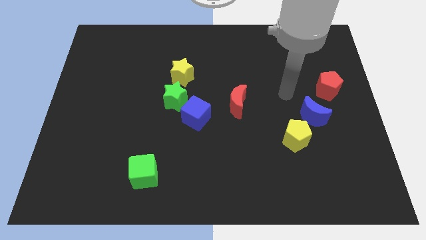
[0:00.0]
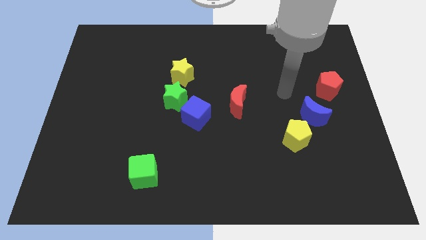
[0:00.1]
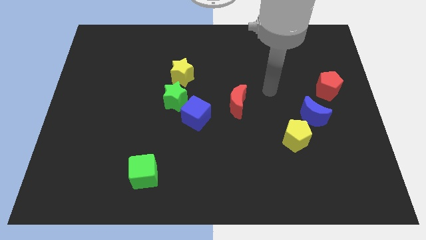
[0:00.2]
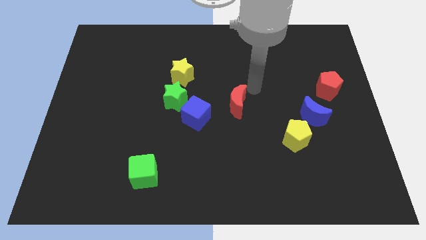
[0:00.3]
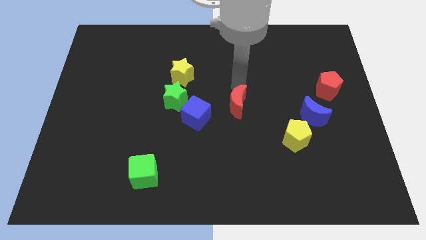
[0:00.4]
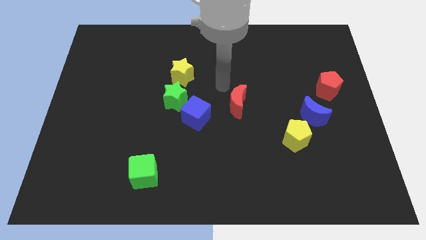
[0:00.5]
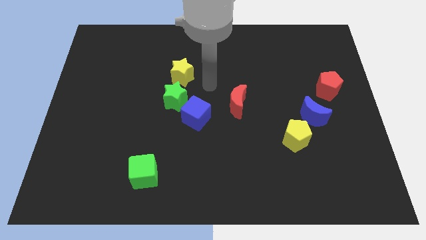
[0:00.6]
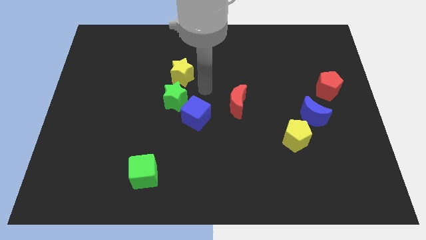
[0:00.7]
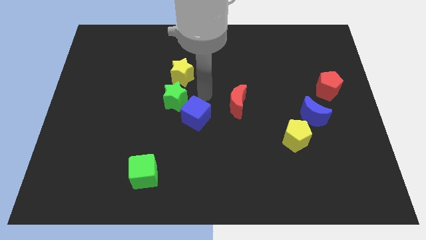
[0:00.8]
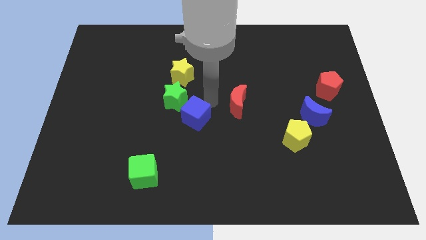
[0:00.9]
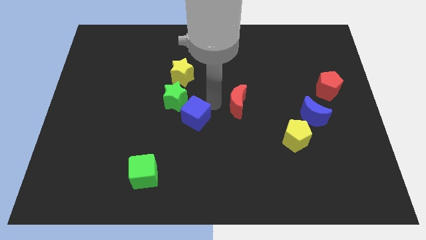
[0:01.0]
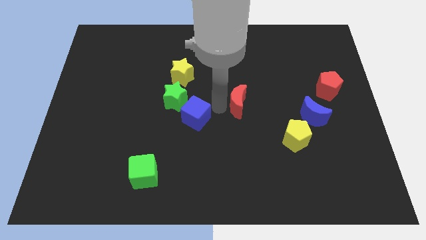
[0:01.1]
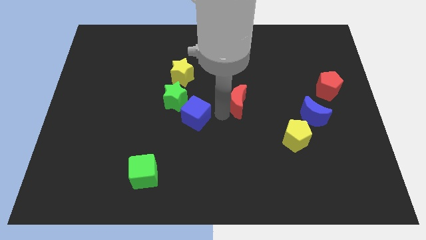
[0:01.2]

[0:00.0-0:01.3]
place your arm to the left side of the red moon

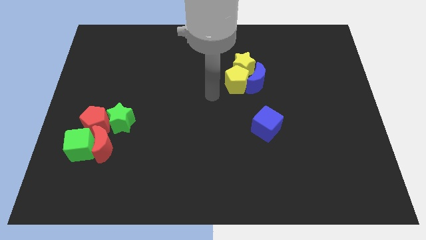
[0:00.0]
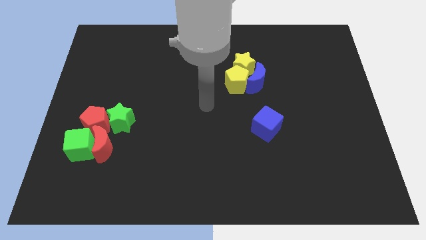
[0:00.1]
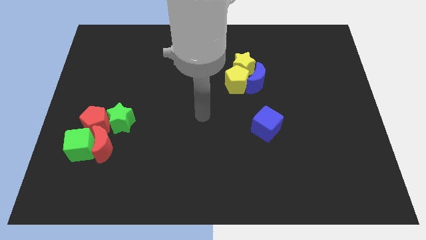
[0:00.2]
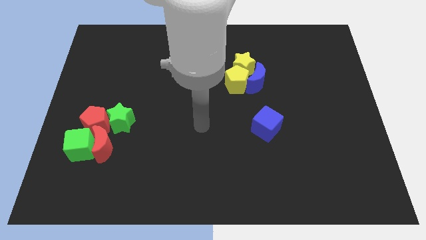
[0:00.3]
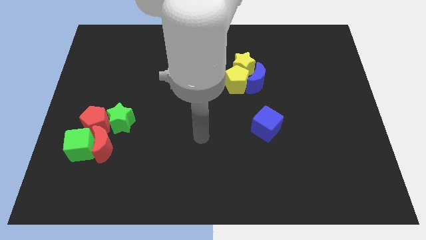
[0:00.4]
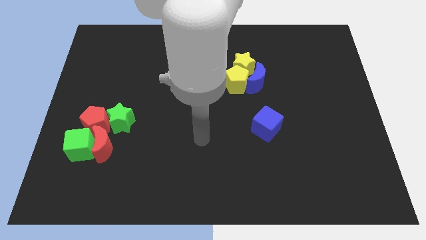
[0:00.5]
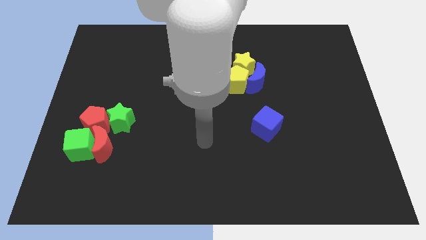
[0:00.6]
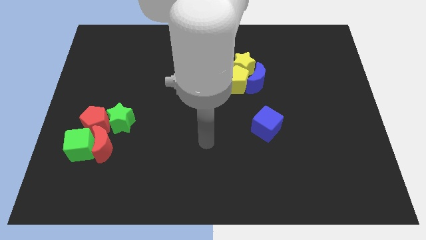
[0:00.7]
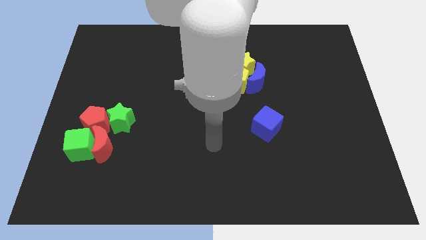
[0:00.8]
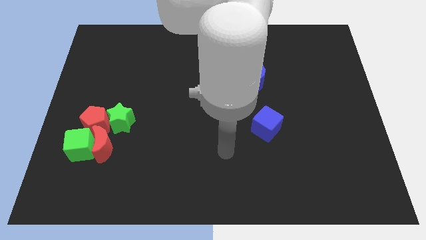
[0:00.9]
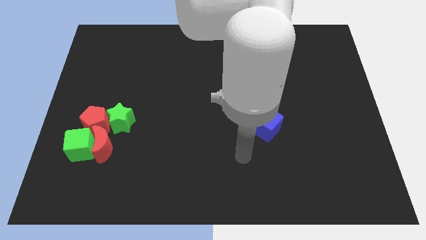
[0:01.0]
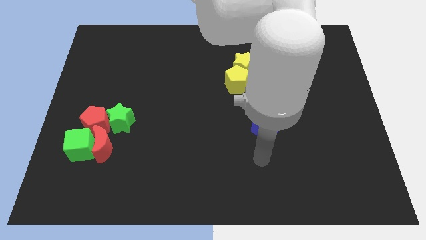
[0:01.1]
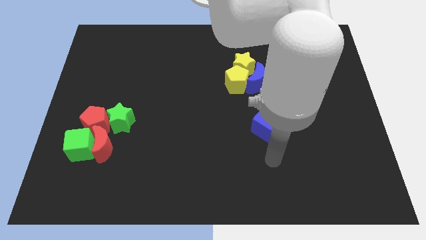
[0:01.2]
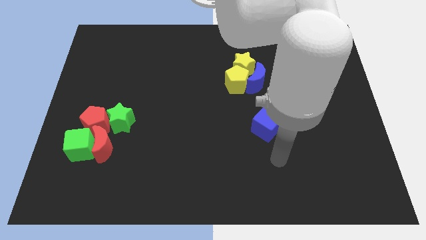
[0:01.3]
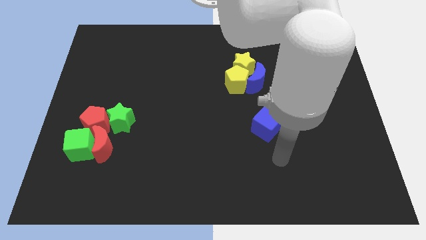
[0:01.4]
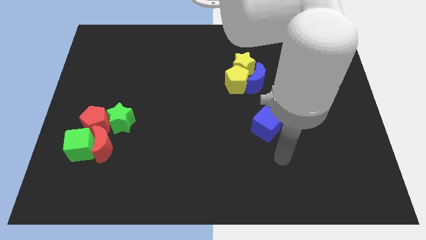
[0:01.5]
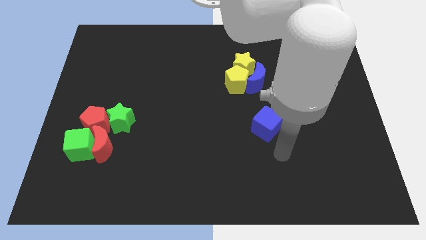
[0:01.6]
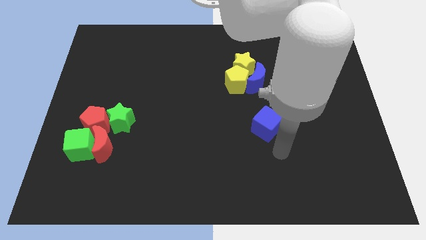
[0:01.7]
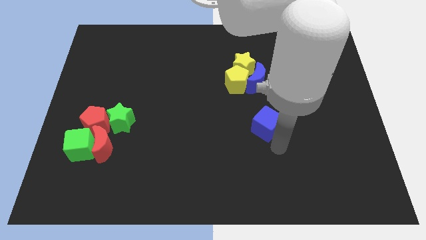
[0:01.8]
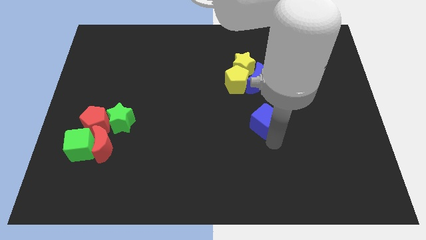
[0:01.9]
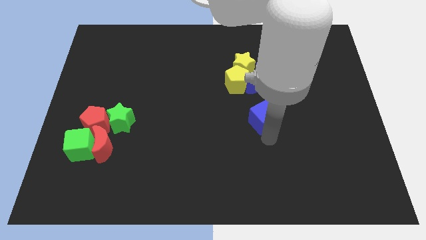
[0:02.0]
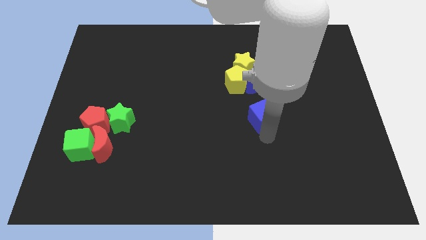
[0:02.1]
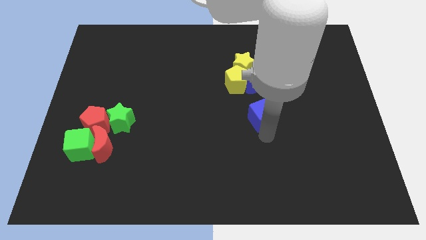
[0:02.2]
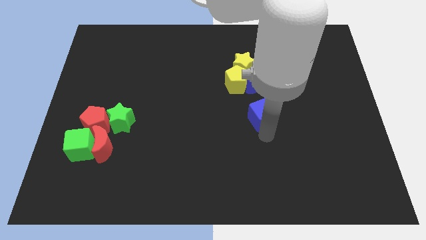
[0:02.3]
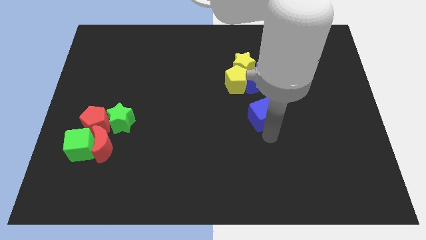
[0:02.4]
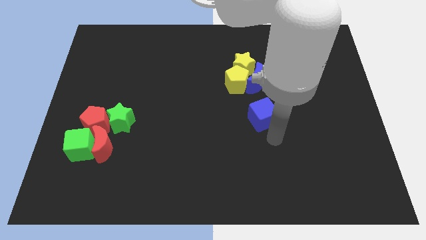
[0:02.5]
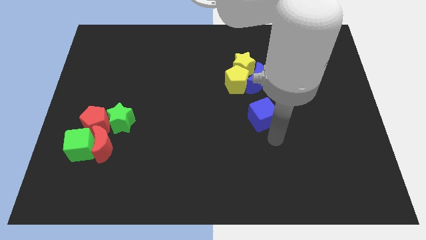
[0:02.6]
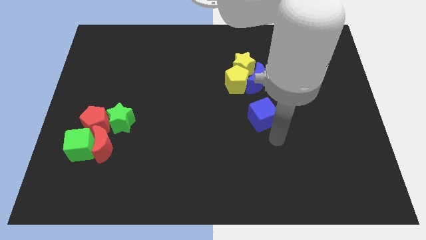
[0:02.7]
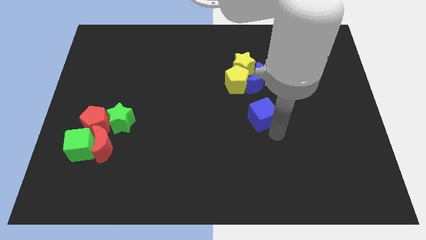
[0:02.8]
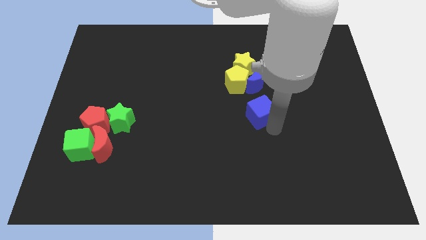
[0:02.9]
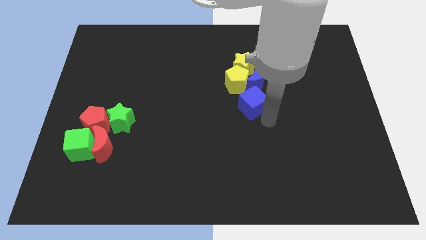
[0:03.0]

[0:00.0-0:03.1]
push blue cube towards blue crescent

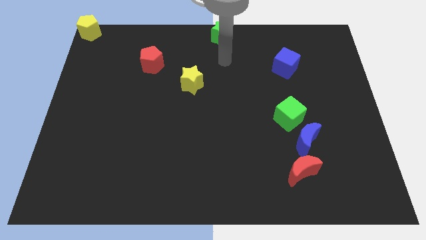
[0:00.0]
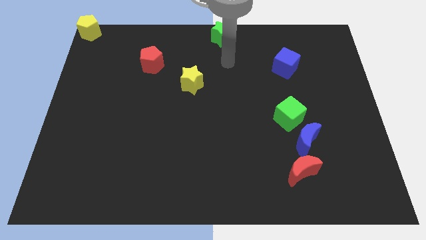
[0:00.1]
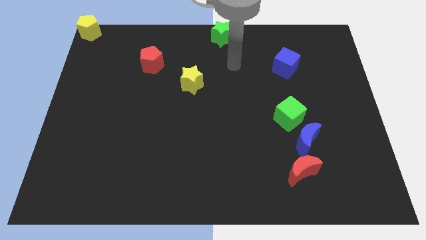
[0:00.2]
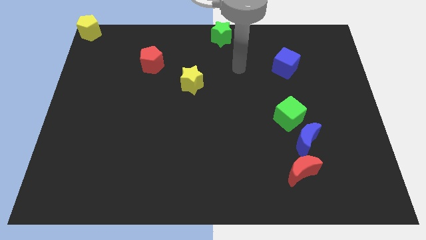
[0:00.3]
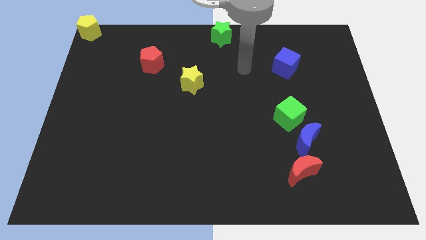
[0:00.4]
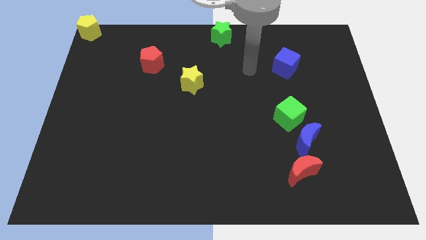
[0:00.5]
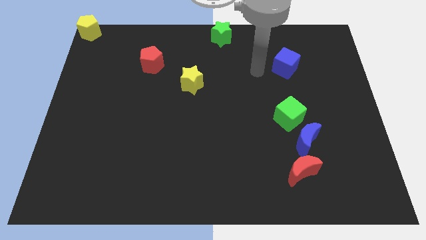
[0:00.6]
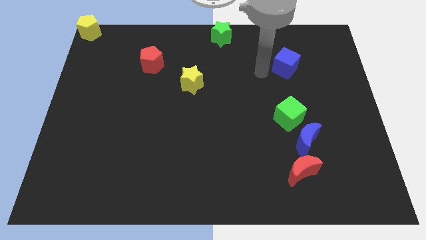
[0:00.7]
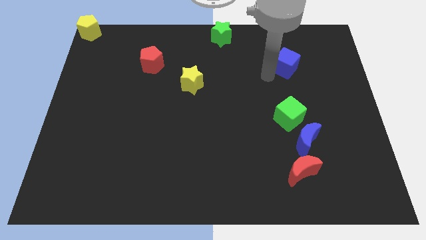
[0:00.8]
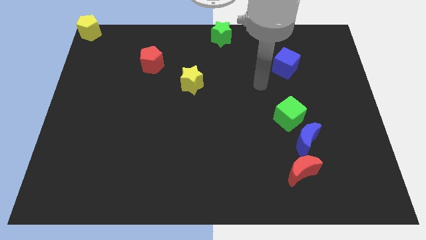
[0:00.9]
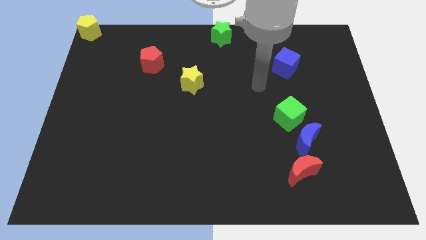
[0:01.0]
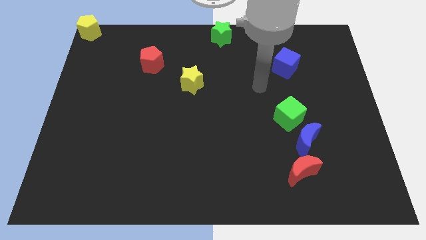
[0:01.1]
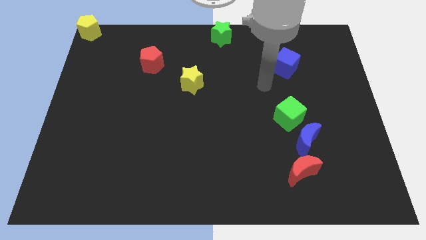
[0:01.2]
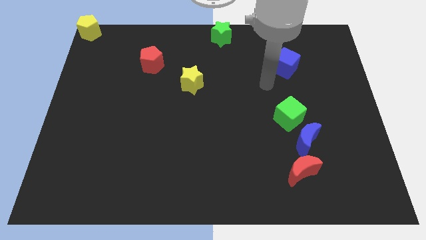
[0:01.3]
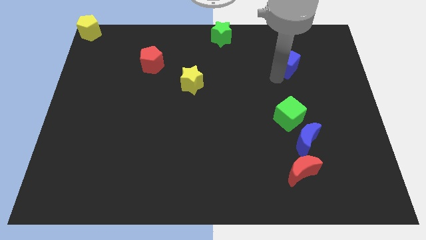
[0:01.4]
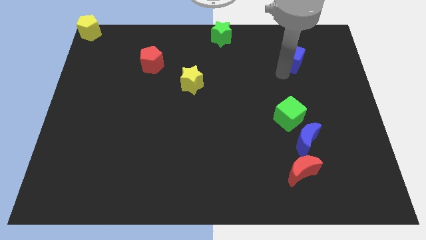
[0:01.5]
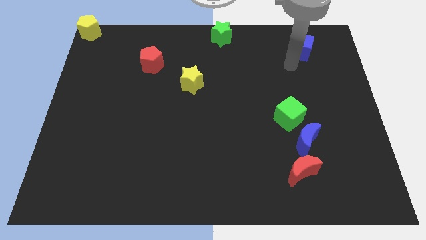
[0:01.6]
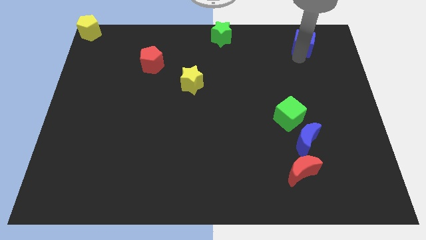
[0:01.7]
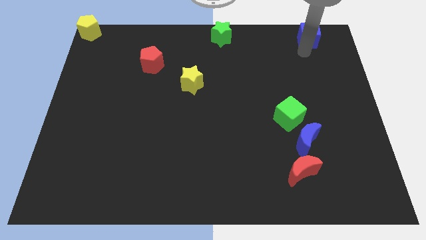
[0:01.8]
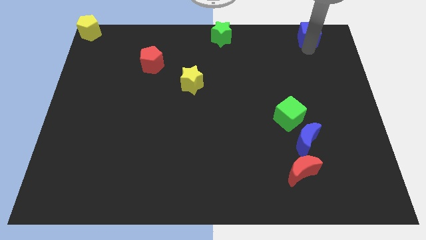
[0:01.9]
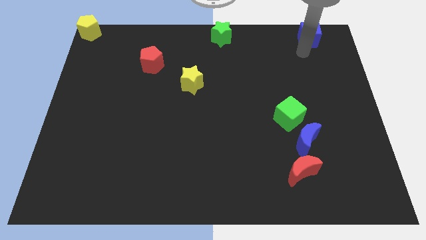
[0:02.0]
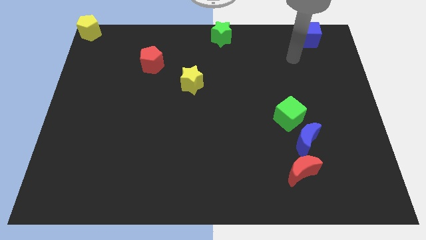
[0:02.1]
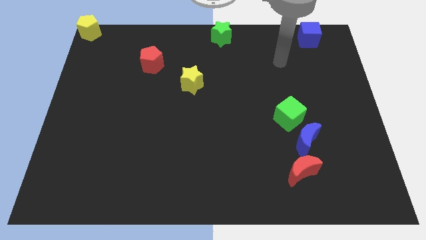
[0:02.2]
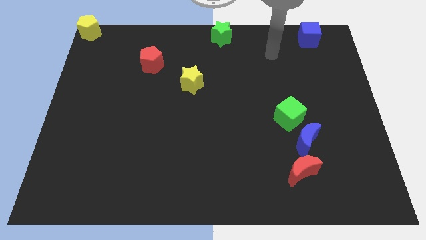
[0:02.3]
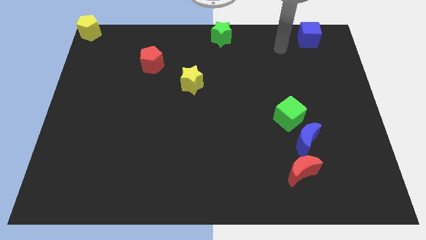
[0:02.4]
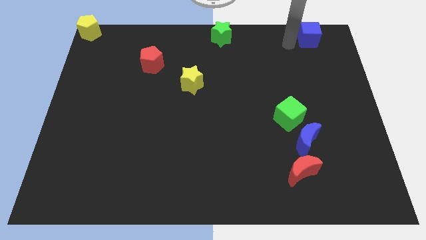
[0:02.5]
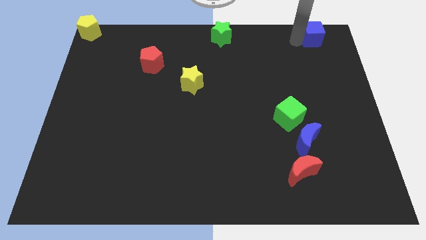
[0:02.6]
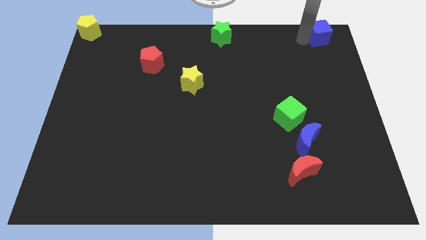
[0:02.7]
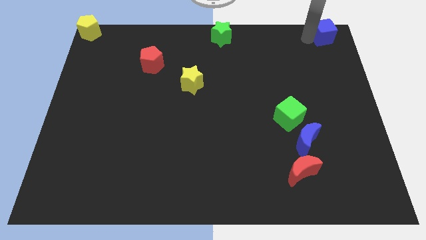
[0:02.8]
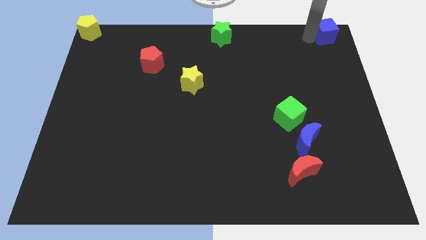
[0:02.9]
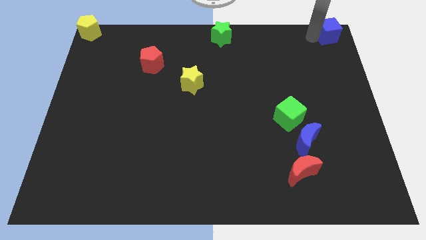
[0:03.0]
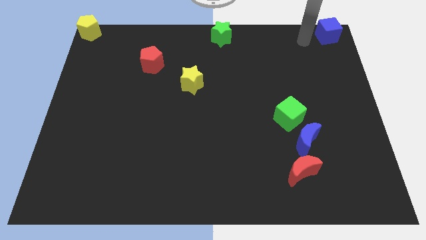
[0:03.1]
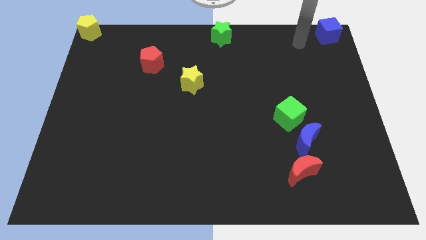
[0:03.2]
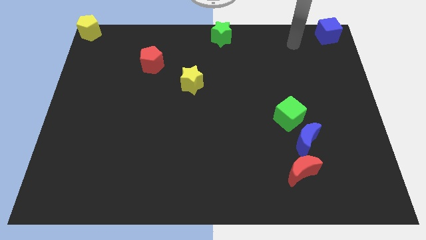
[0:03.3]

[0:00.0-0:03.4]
move the blue cube to the top right

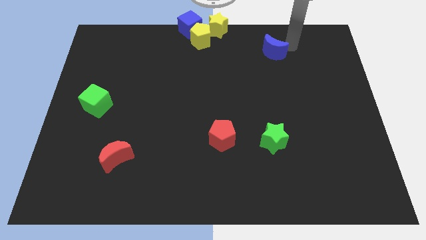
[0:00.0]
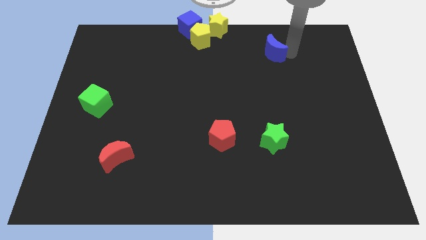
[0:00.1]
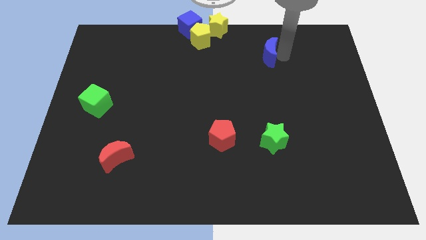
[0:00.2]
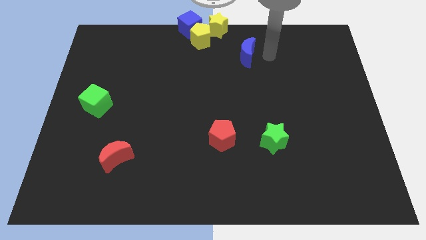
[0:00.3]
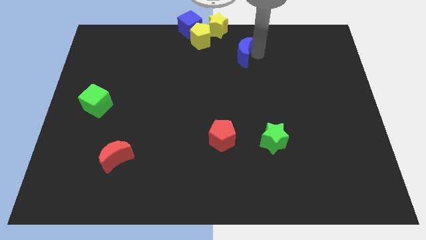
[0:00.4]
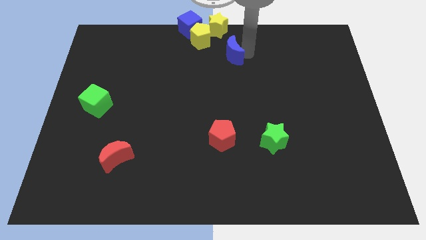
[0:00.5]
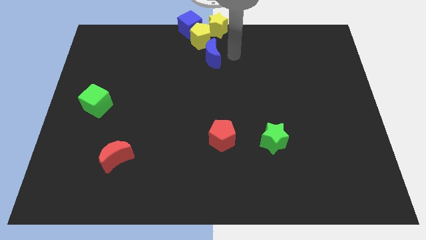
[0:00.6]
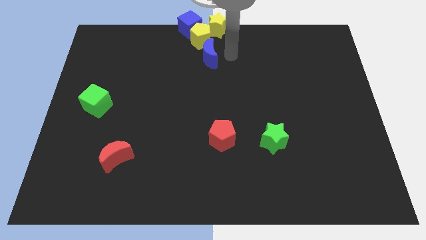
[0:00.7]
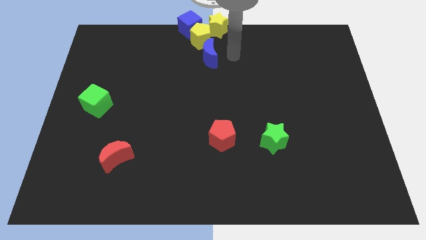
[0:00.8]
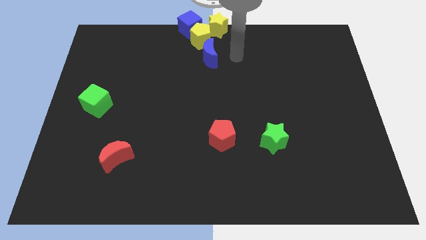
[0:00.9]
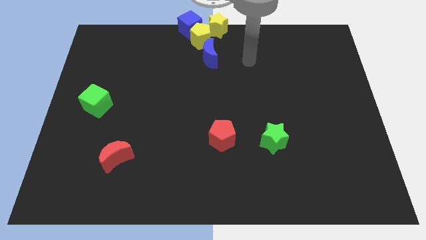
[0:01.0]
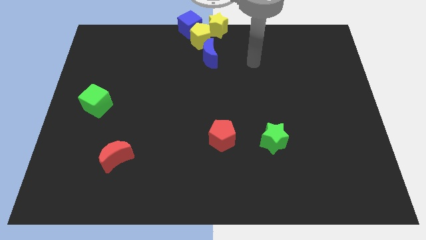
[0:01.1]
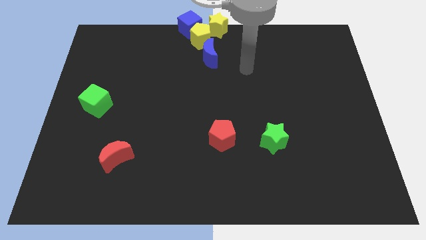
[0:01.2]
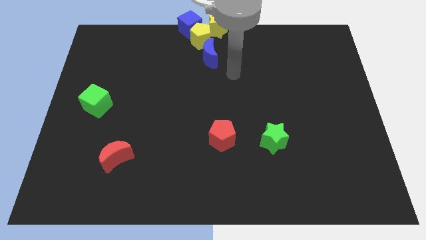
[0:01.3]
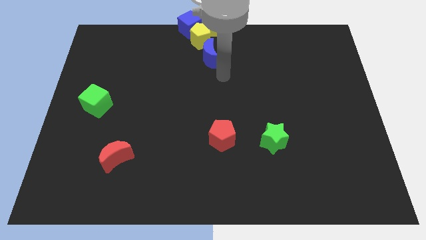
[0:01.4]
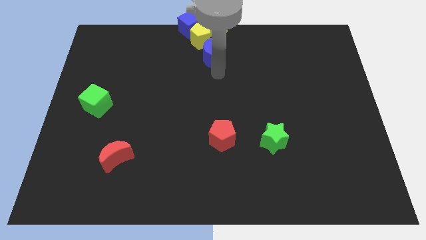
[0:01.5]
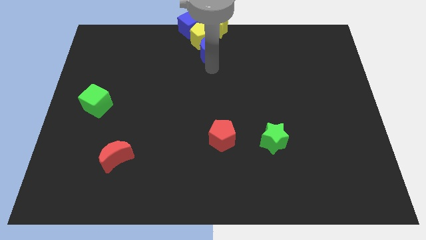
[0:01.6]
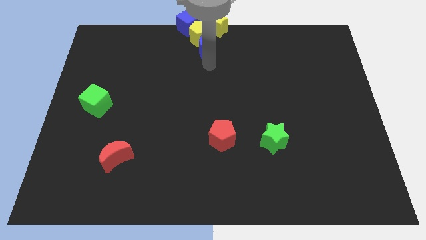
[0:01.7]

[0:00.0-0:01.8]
move the blue crescent into the yellow pentagon
